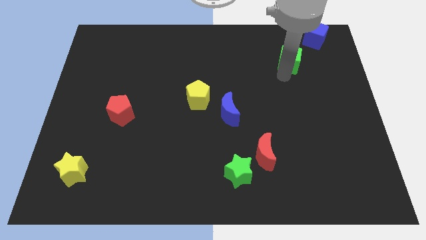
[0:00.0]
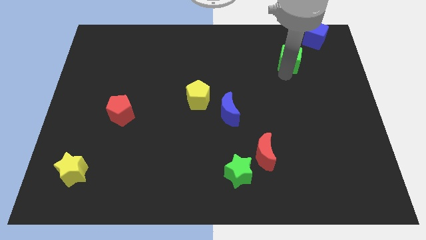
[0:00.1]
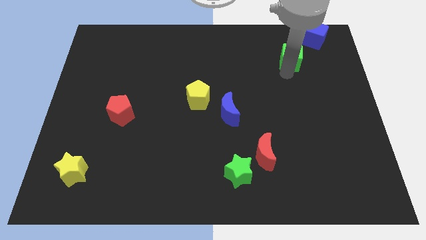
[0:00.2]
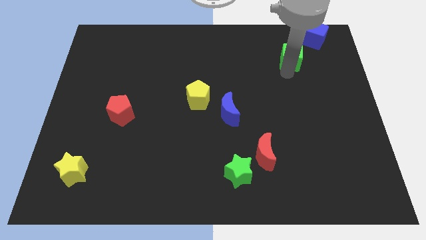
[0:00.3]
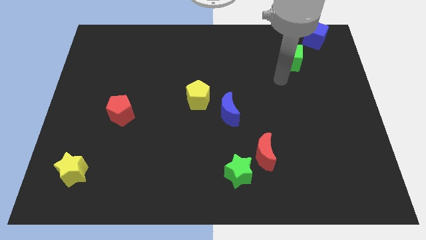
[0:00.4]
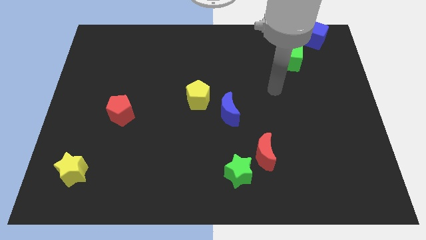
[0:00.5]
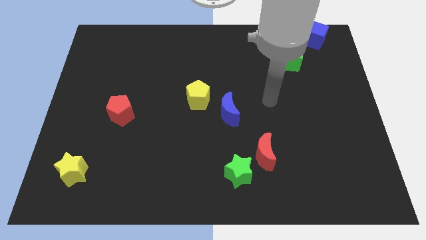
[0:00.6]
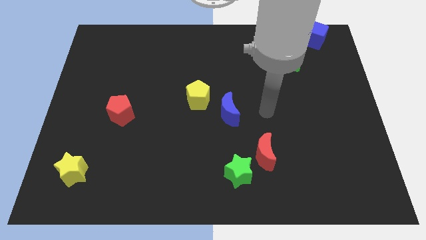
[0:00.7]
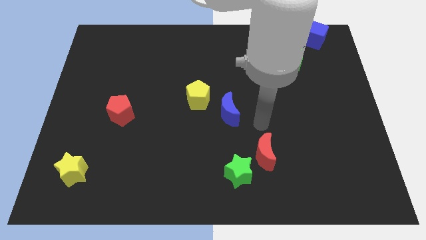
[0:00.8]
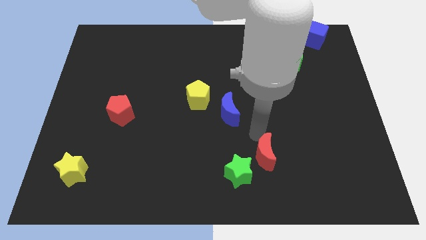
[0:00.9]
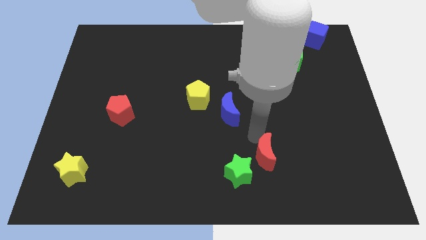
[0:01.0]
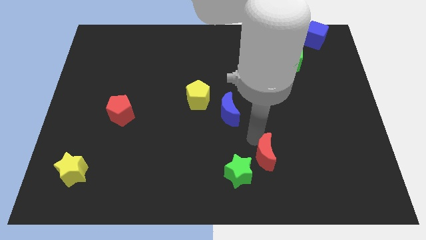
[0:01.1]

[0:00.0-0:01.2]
place arm on top of red moon

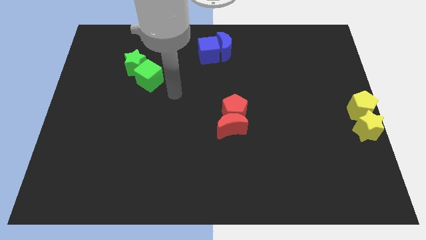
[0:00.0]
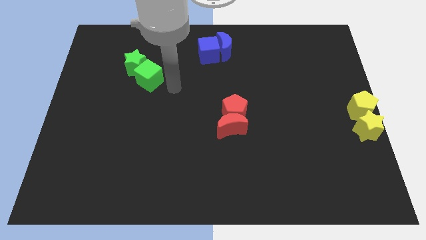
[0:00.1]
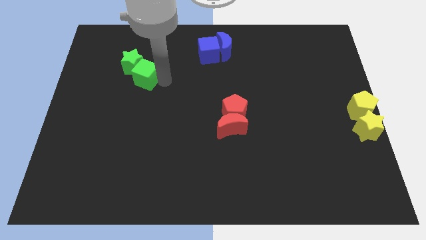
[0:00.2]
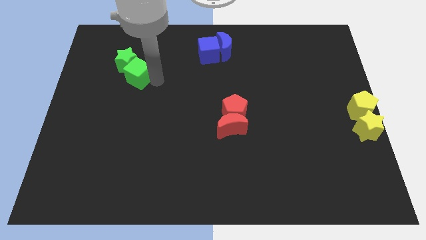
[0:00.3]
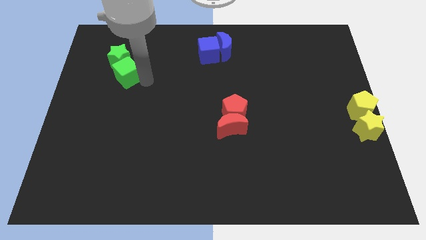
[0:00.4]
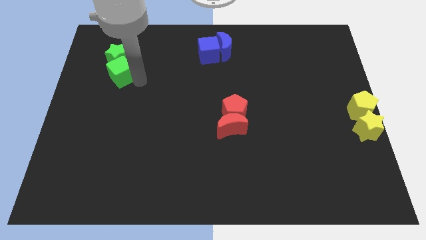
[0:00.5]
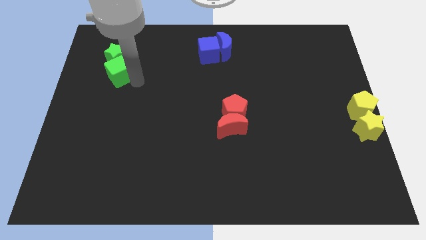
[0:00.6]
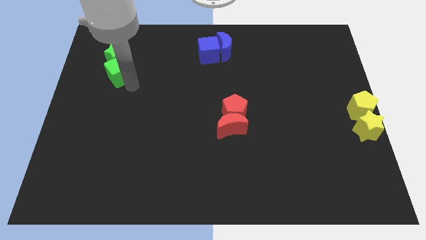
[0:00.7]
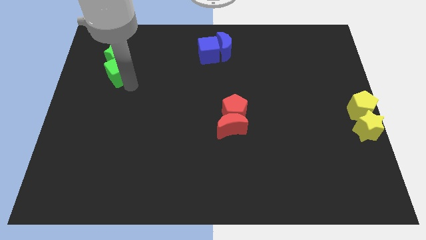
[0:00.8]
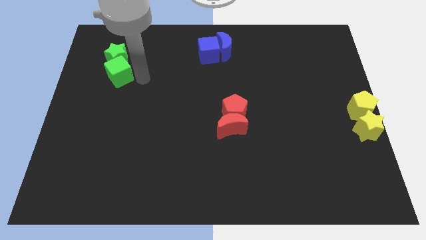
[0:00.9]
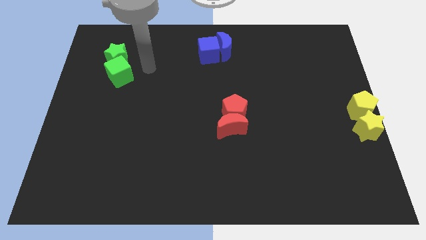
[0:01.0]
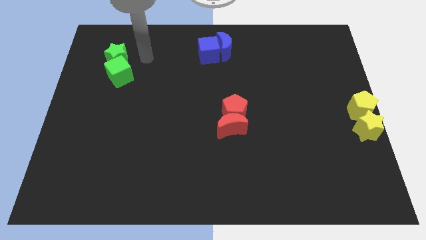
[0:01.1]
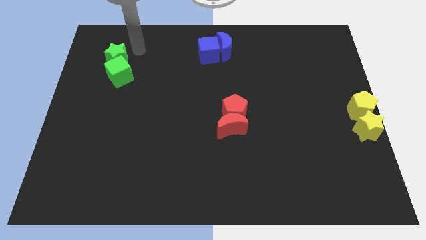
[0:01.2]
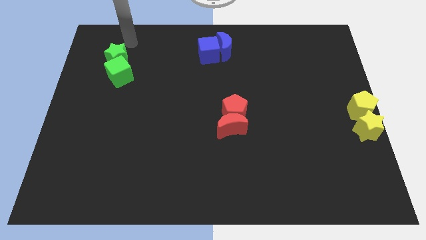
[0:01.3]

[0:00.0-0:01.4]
move the green blocks to top left

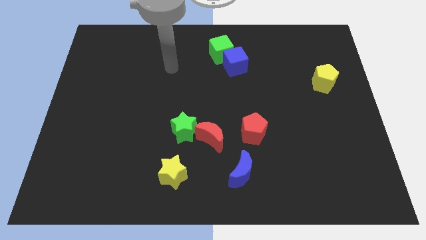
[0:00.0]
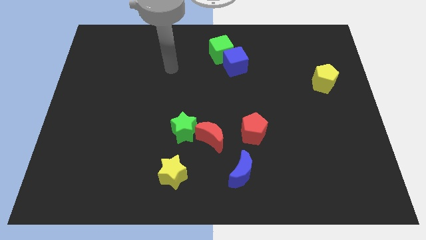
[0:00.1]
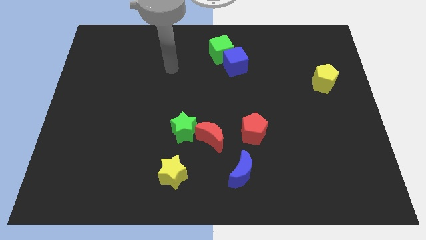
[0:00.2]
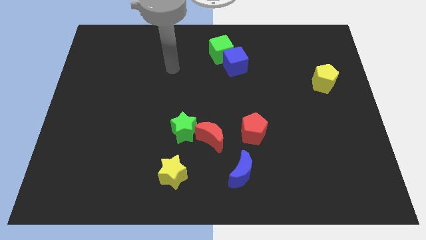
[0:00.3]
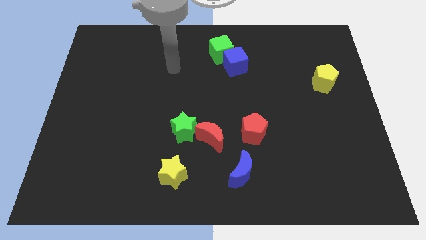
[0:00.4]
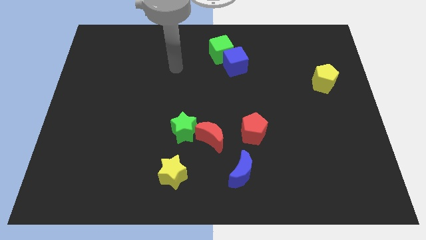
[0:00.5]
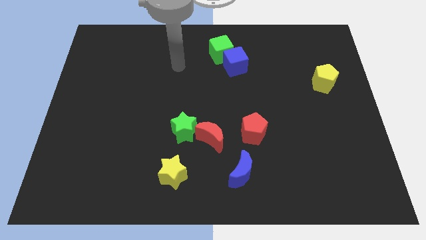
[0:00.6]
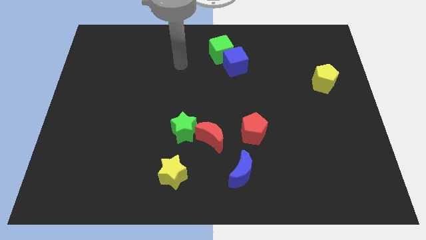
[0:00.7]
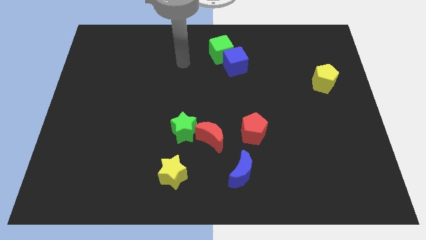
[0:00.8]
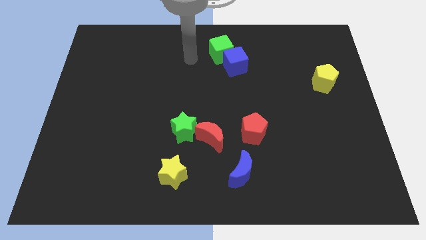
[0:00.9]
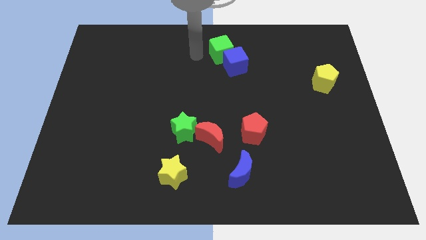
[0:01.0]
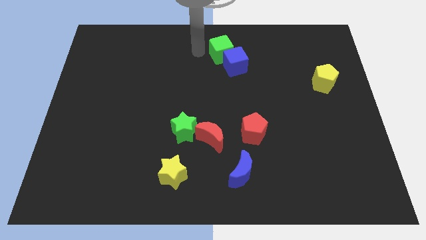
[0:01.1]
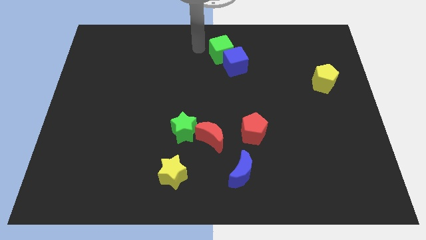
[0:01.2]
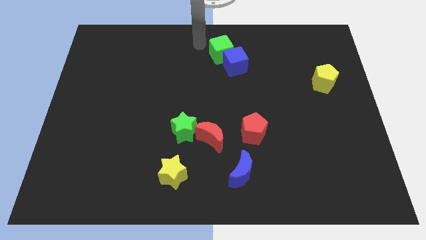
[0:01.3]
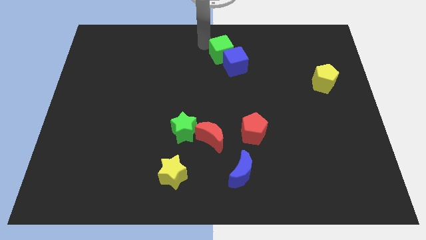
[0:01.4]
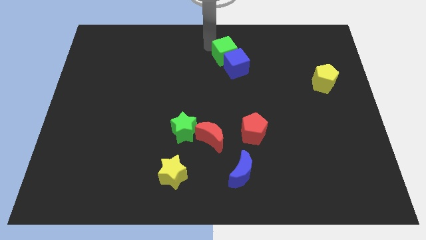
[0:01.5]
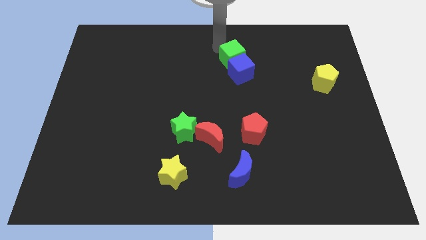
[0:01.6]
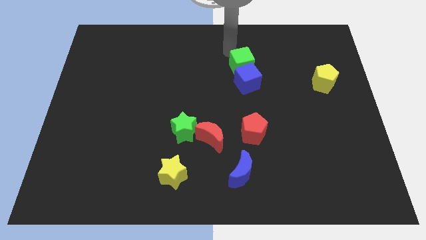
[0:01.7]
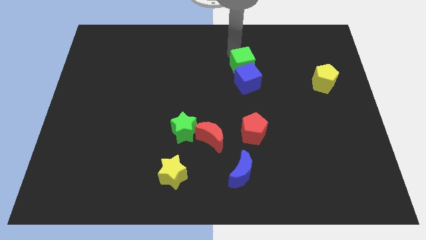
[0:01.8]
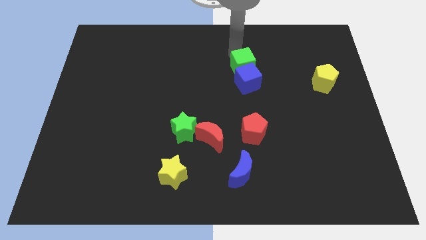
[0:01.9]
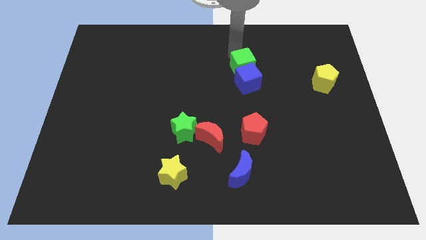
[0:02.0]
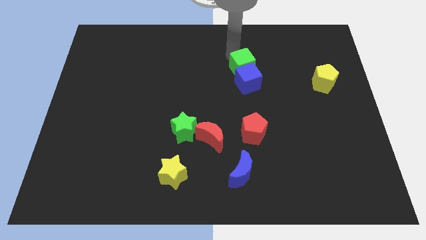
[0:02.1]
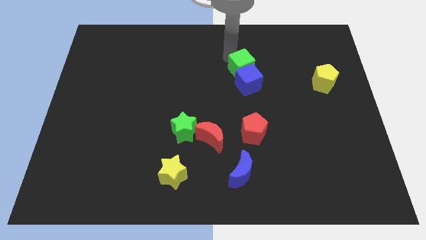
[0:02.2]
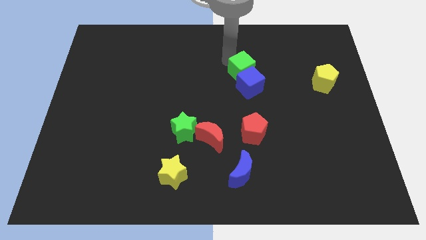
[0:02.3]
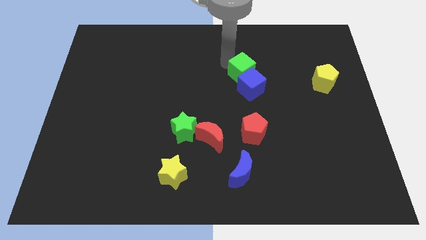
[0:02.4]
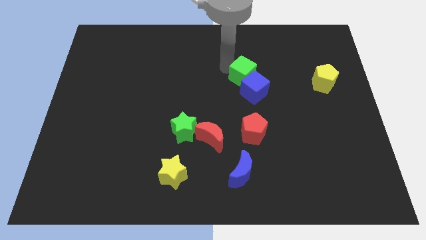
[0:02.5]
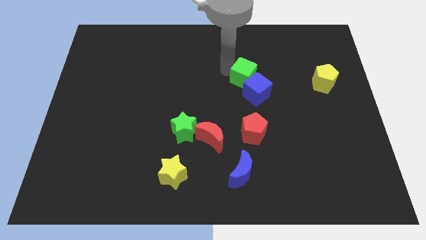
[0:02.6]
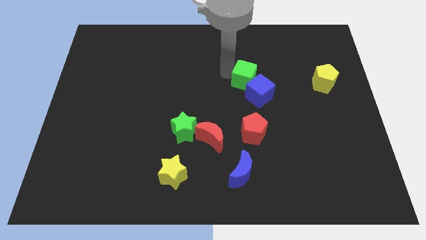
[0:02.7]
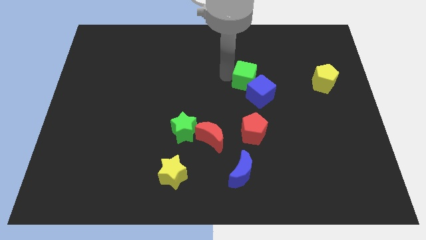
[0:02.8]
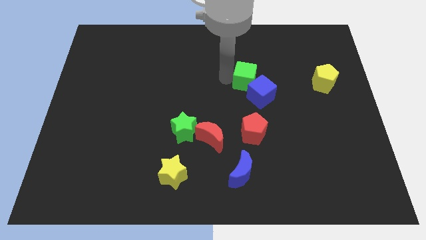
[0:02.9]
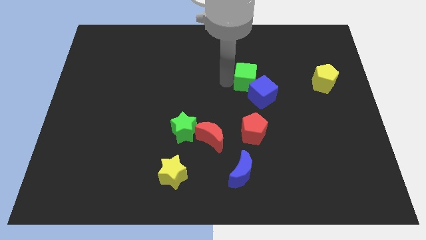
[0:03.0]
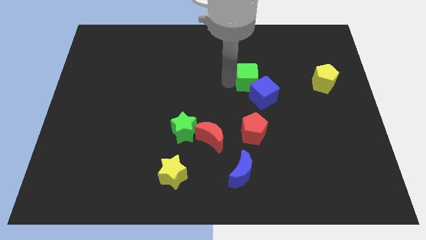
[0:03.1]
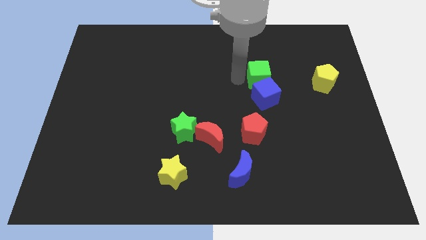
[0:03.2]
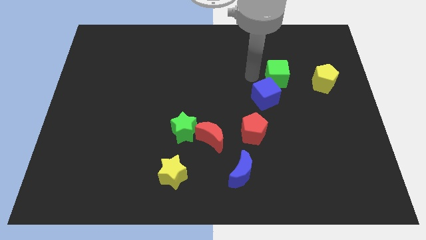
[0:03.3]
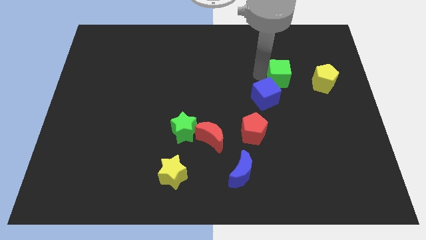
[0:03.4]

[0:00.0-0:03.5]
push green cube to the left side of yellow pentagon

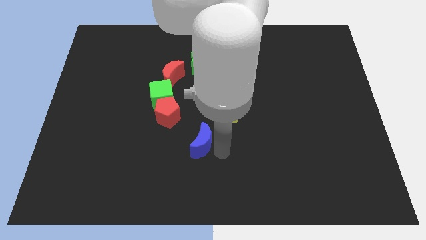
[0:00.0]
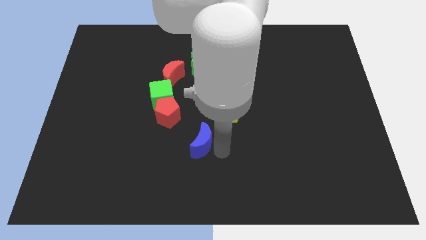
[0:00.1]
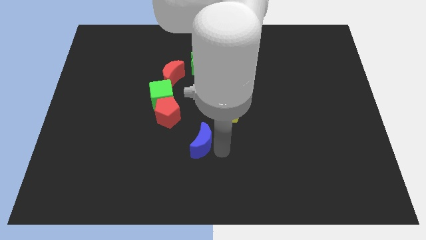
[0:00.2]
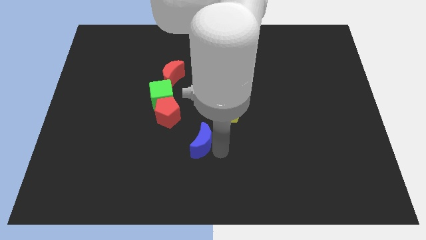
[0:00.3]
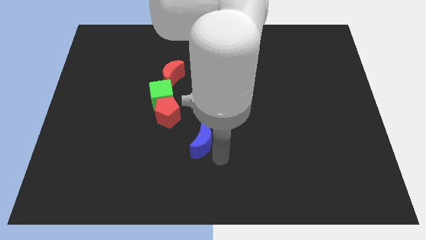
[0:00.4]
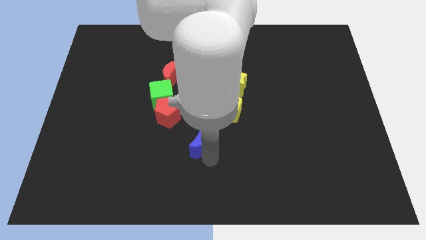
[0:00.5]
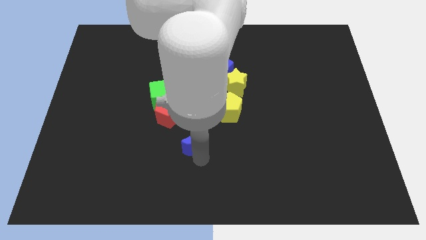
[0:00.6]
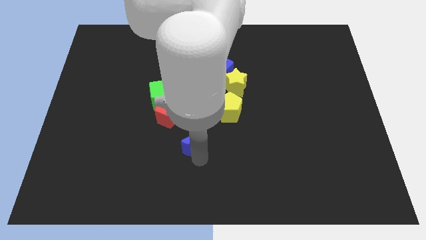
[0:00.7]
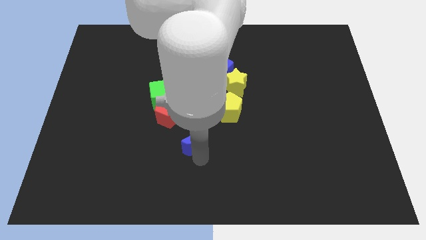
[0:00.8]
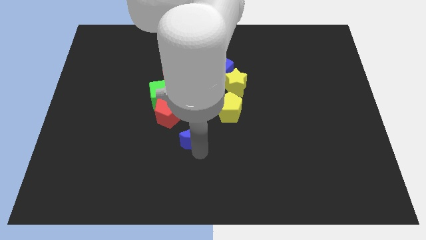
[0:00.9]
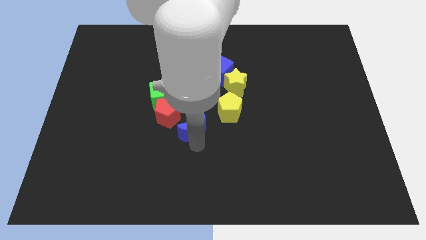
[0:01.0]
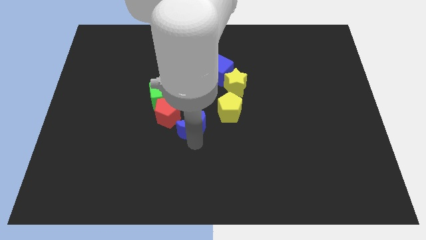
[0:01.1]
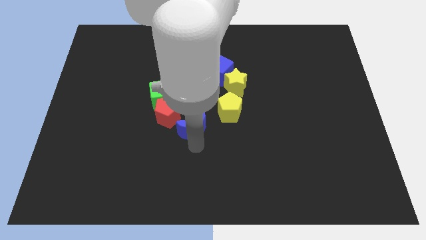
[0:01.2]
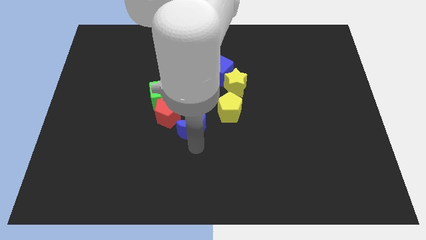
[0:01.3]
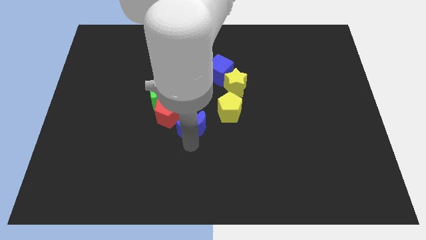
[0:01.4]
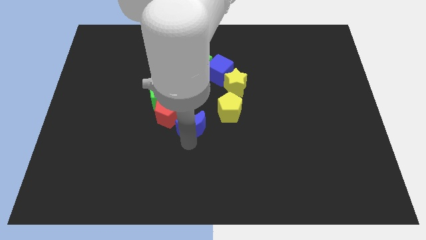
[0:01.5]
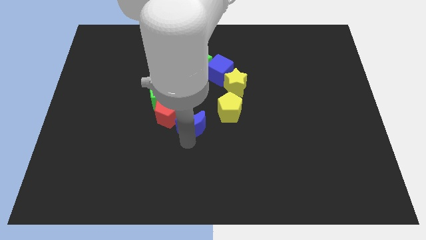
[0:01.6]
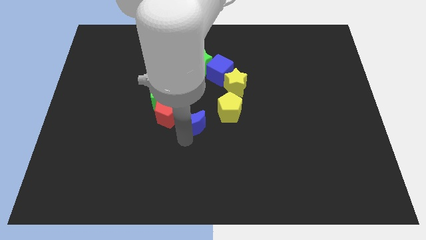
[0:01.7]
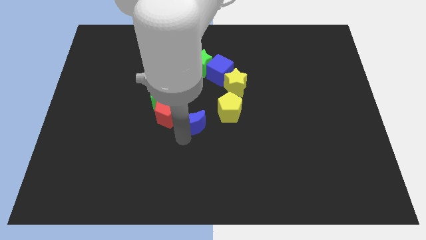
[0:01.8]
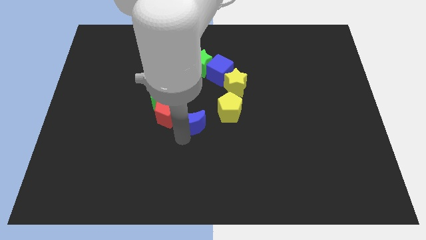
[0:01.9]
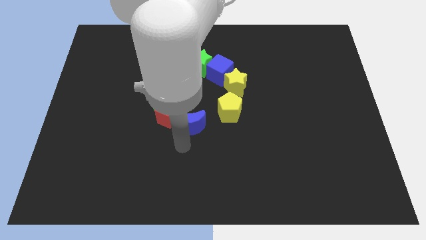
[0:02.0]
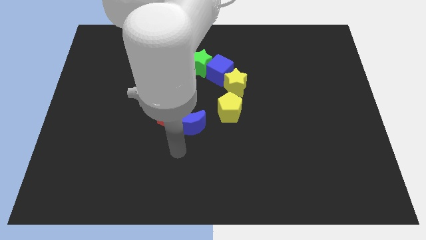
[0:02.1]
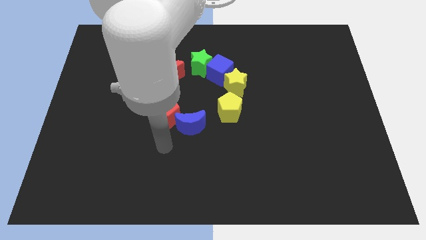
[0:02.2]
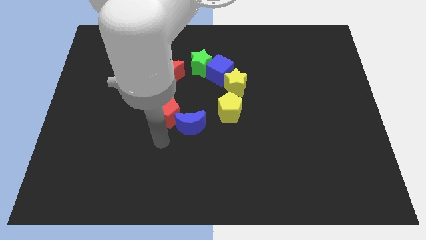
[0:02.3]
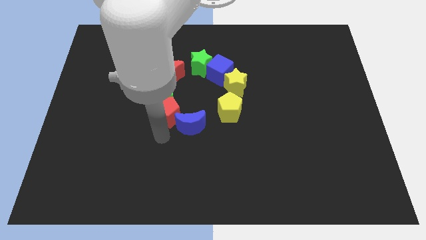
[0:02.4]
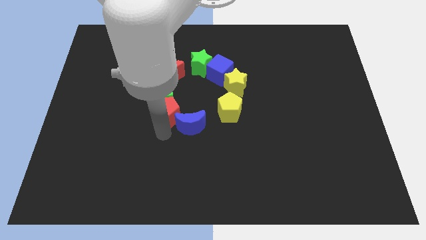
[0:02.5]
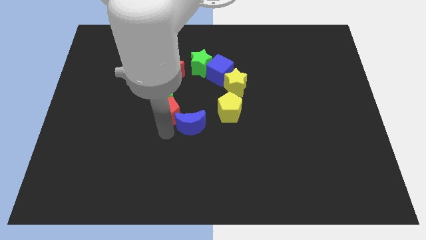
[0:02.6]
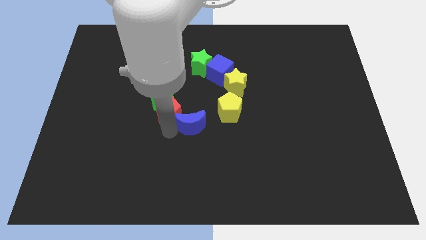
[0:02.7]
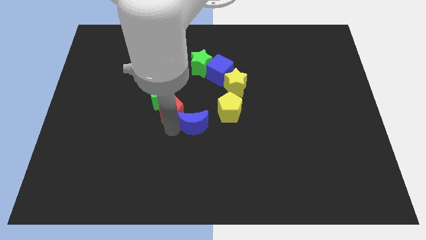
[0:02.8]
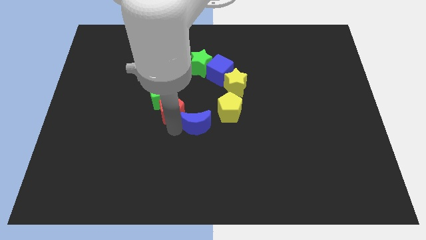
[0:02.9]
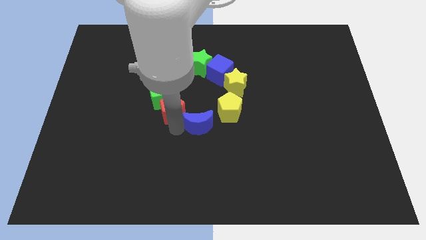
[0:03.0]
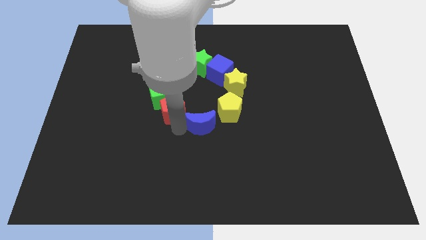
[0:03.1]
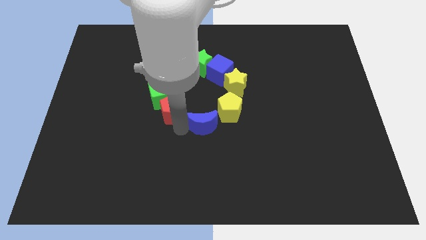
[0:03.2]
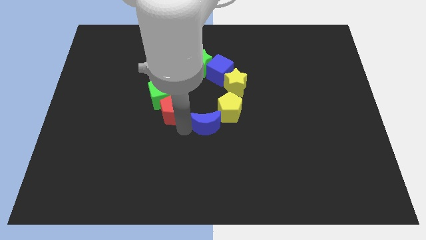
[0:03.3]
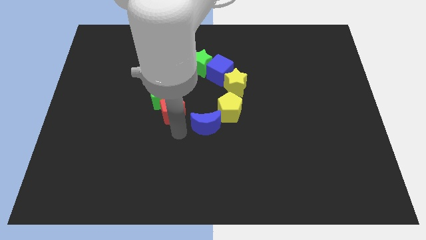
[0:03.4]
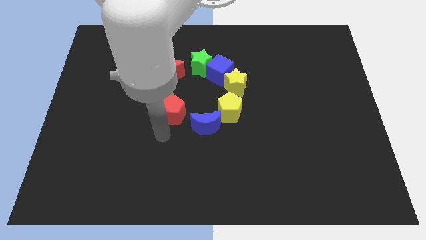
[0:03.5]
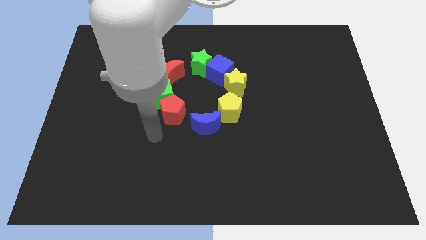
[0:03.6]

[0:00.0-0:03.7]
move the blue crescent to the bottom left of the yellow pentagon
